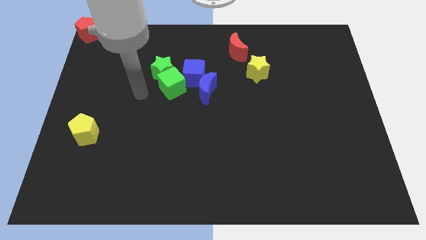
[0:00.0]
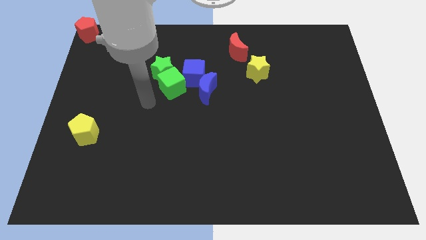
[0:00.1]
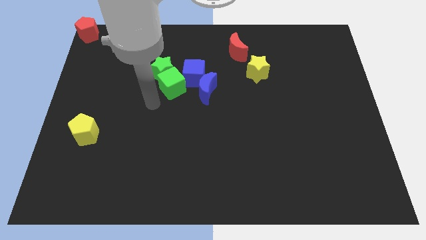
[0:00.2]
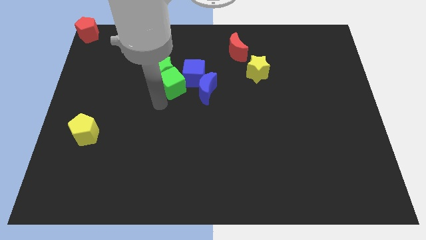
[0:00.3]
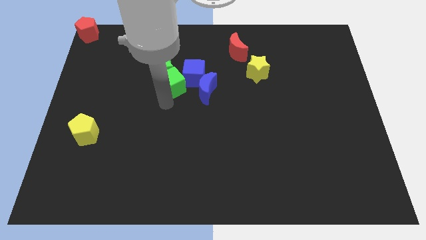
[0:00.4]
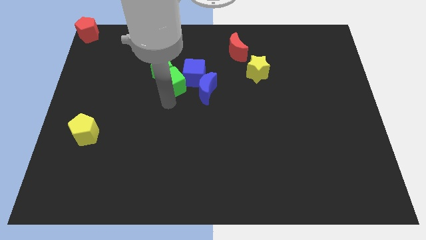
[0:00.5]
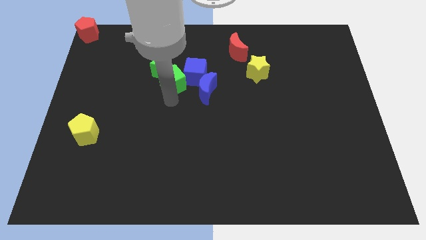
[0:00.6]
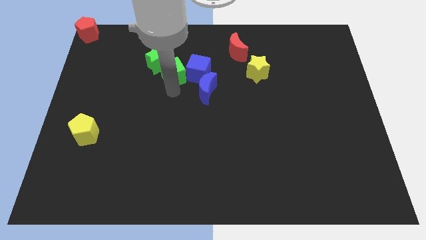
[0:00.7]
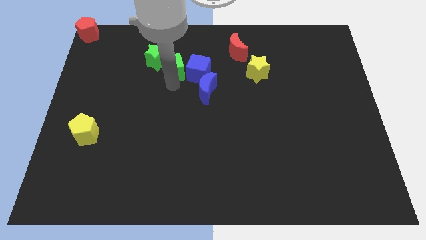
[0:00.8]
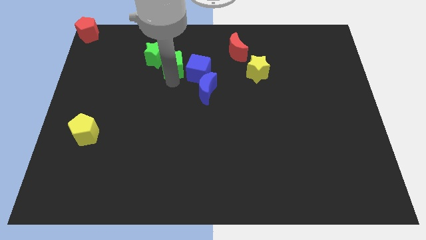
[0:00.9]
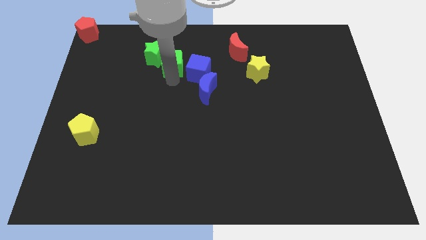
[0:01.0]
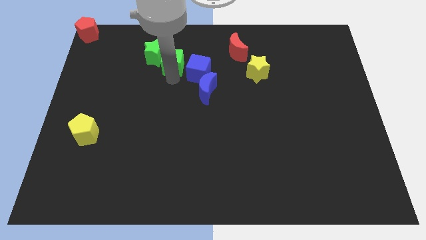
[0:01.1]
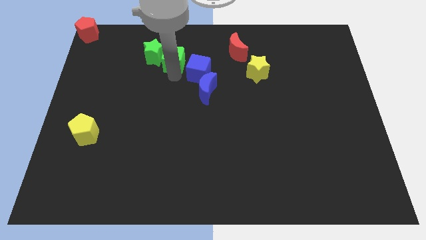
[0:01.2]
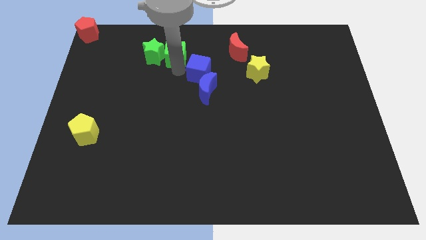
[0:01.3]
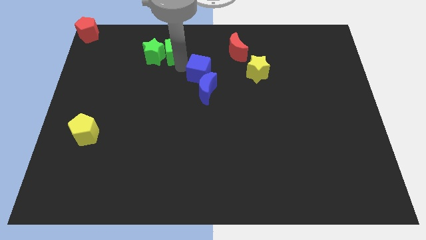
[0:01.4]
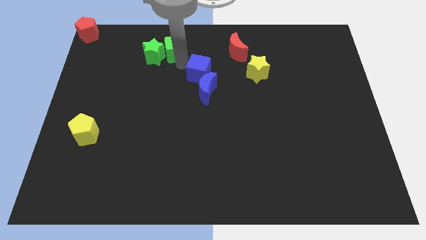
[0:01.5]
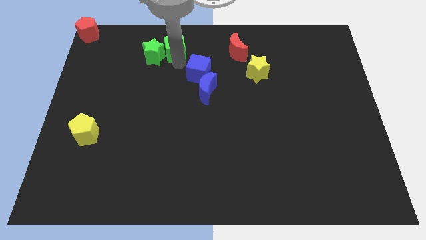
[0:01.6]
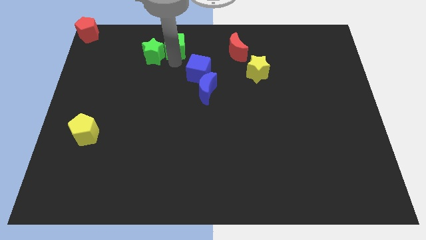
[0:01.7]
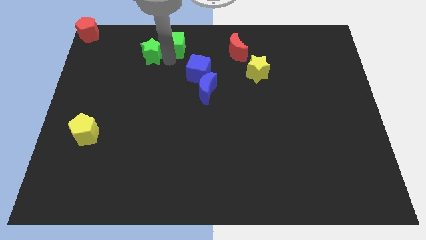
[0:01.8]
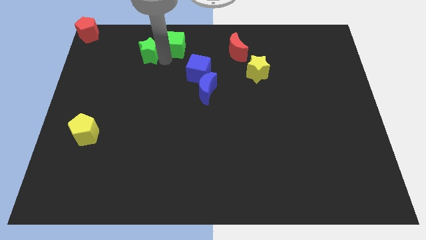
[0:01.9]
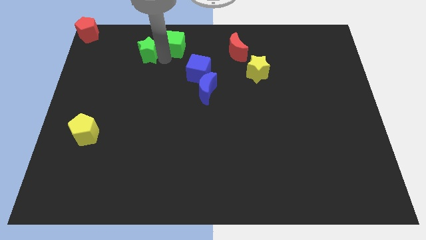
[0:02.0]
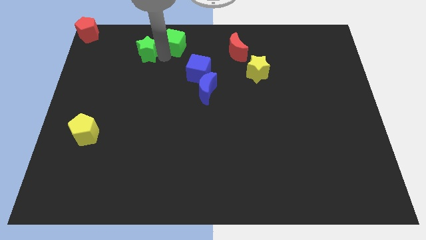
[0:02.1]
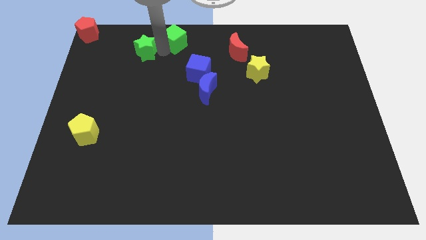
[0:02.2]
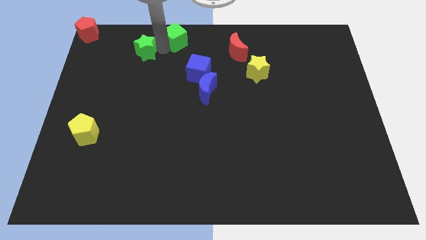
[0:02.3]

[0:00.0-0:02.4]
move green cube into green star

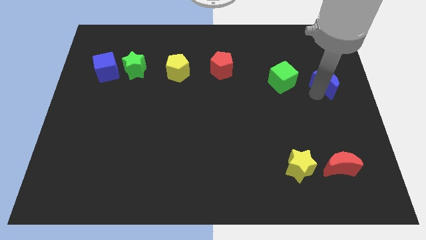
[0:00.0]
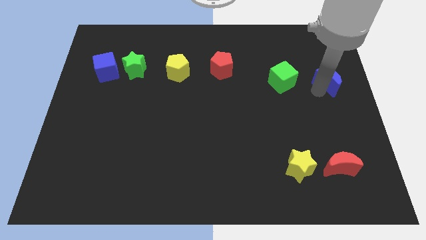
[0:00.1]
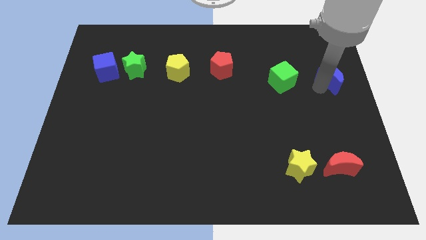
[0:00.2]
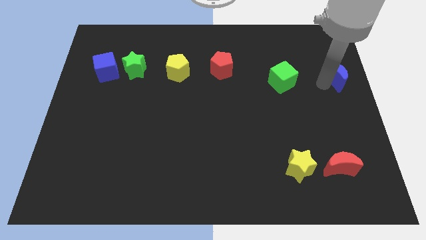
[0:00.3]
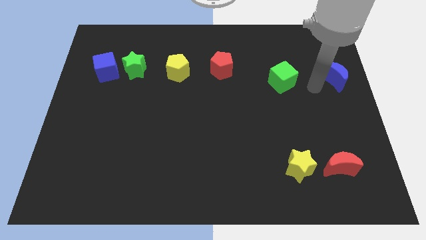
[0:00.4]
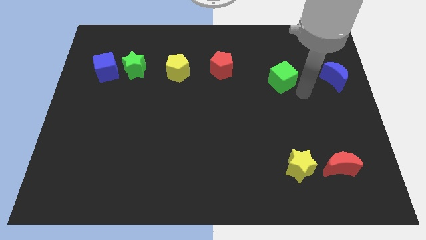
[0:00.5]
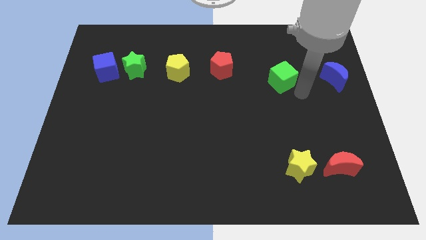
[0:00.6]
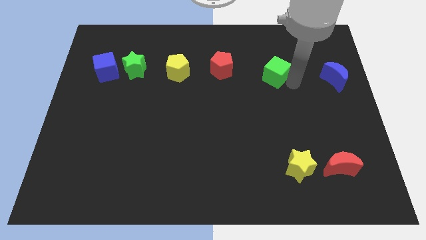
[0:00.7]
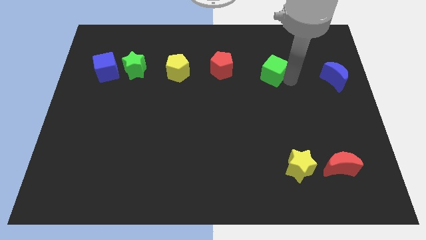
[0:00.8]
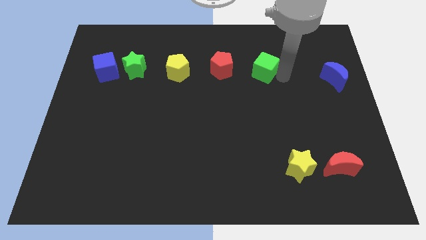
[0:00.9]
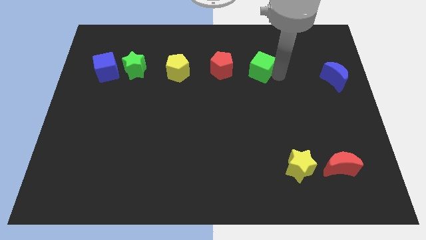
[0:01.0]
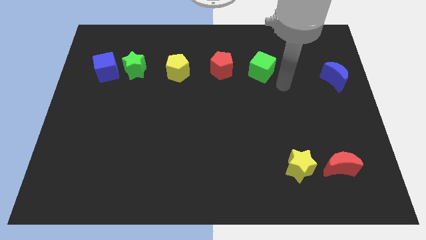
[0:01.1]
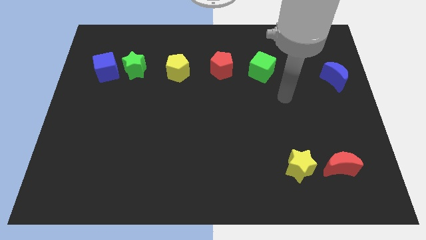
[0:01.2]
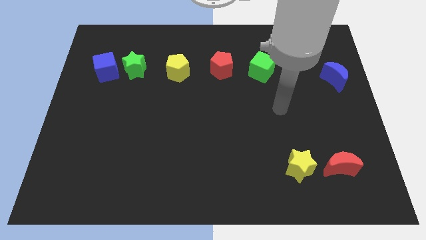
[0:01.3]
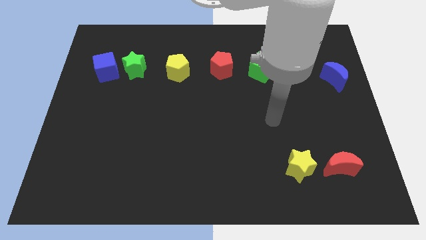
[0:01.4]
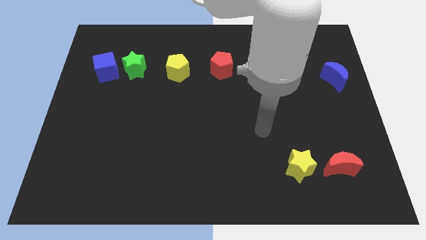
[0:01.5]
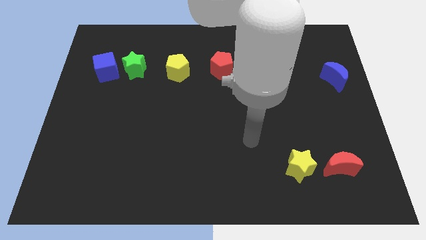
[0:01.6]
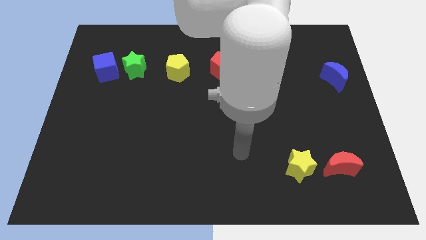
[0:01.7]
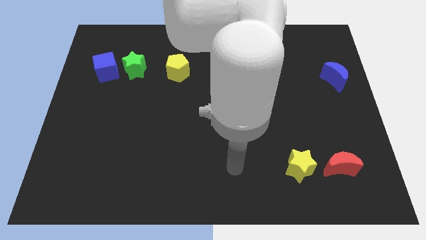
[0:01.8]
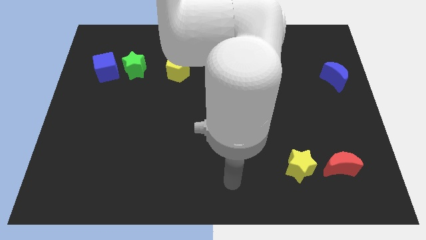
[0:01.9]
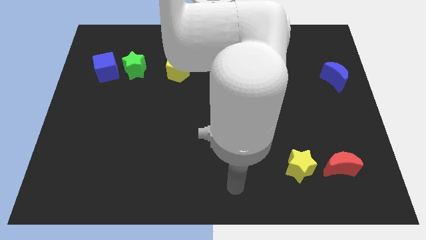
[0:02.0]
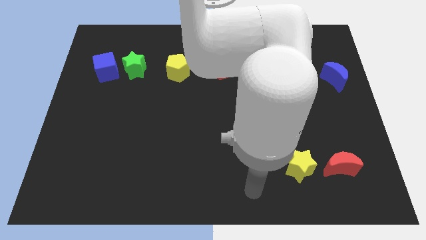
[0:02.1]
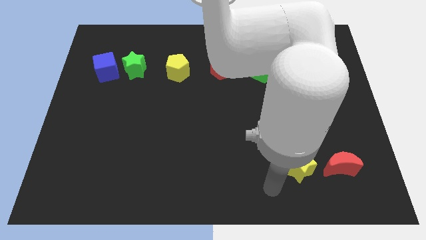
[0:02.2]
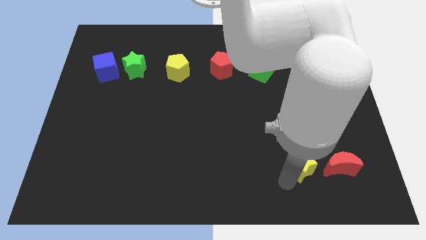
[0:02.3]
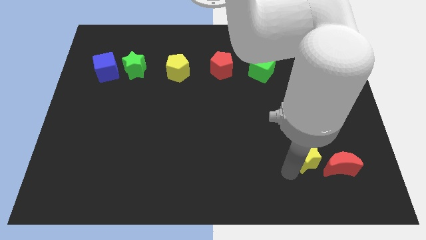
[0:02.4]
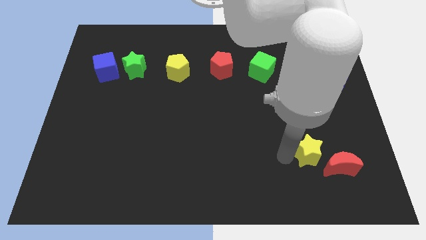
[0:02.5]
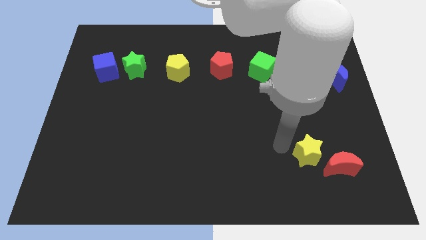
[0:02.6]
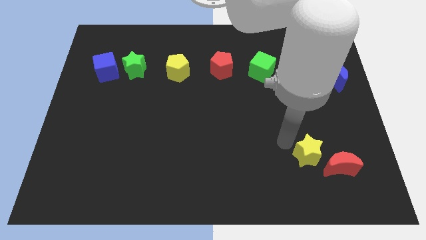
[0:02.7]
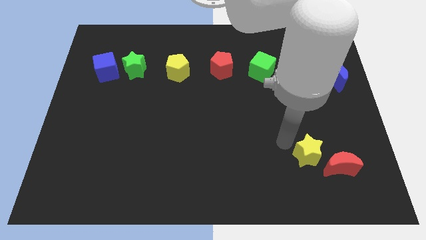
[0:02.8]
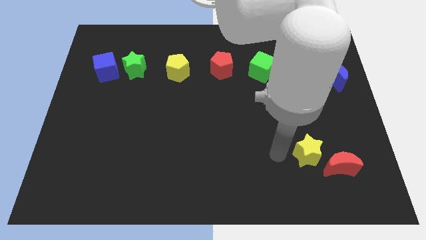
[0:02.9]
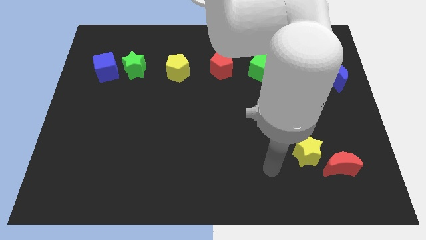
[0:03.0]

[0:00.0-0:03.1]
move your arm towards the left side of the yellow star

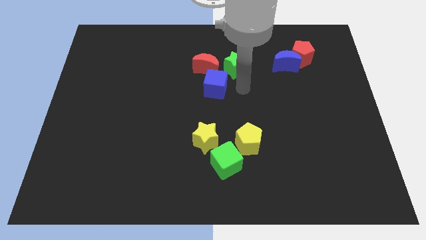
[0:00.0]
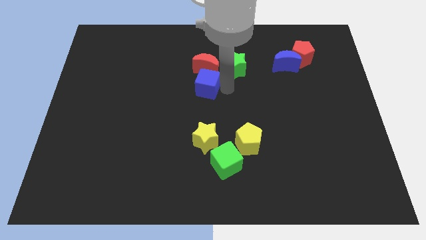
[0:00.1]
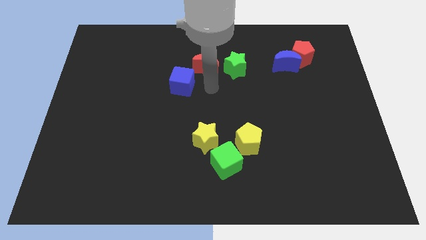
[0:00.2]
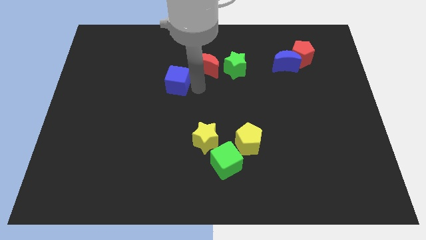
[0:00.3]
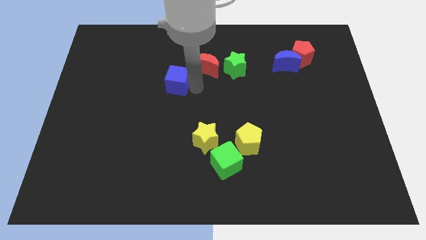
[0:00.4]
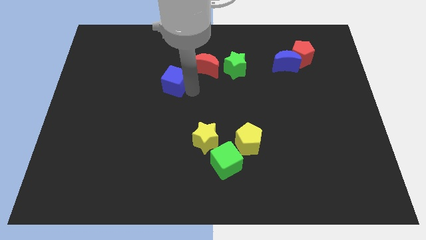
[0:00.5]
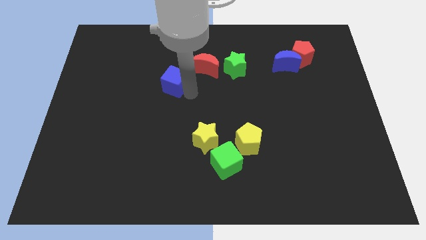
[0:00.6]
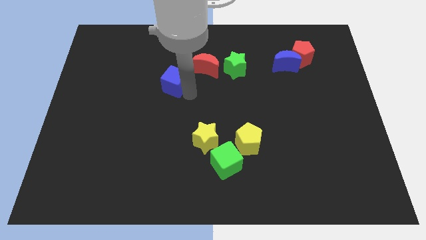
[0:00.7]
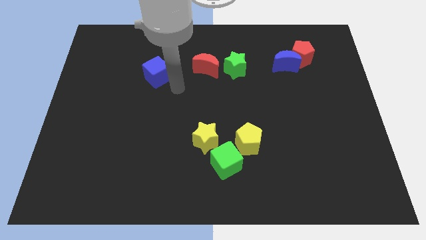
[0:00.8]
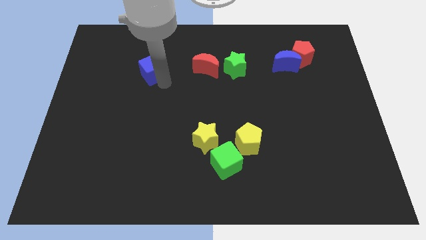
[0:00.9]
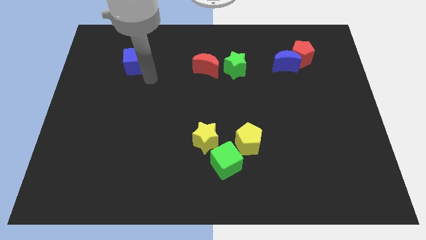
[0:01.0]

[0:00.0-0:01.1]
push the blue cube to the left of the red crescent

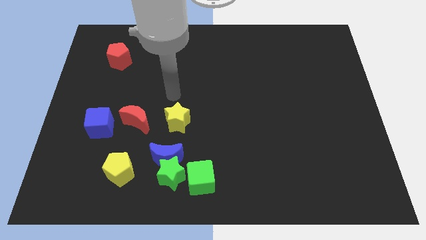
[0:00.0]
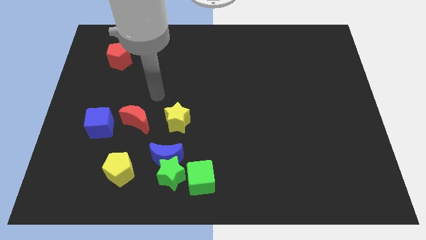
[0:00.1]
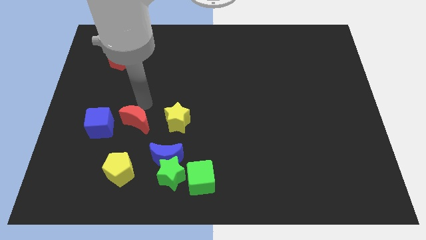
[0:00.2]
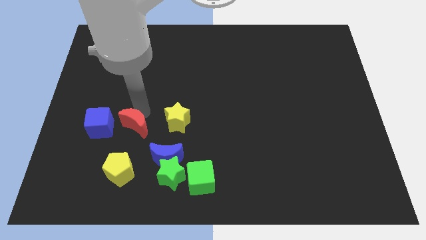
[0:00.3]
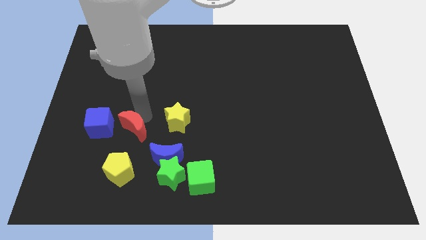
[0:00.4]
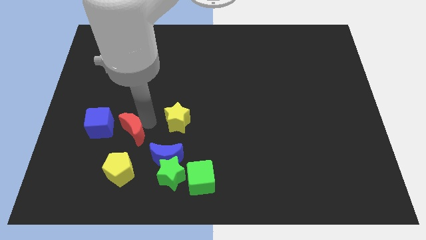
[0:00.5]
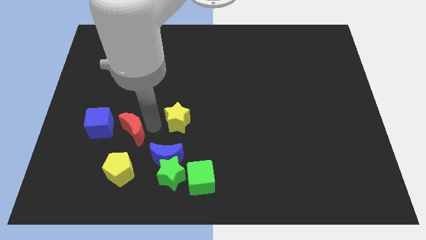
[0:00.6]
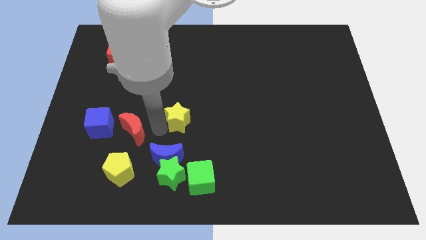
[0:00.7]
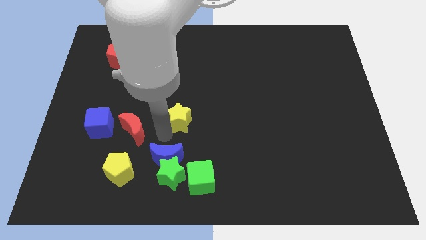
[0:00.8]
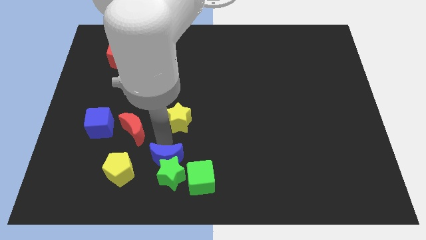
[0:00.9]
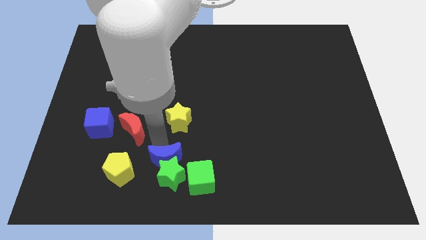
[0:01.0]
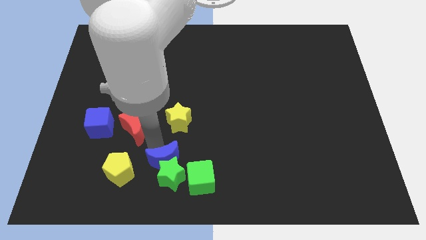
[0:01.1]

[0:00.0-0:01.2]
move the arm to the blue crescent

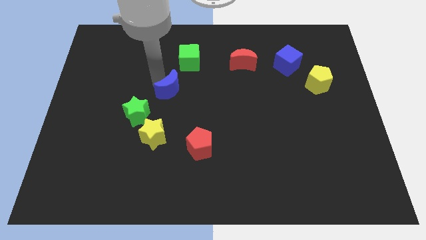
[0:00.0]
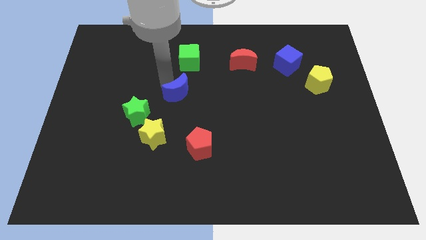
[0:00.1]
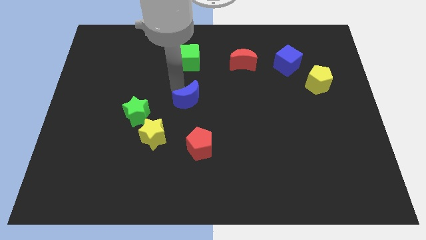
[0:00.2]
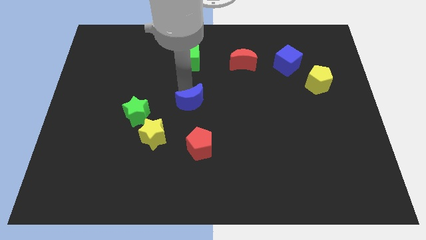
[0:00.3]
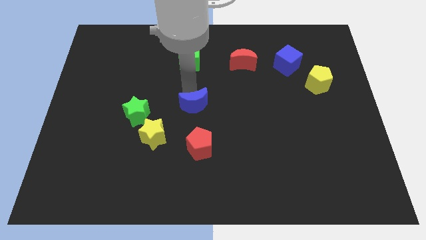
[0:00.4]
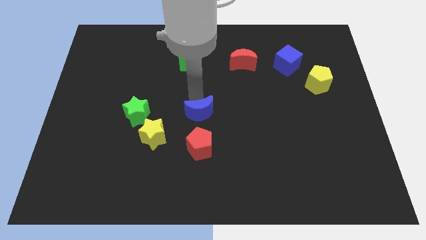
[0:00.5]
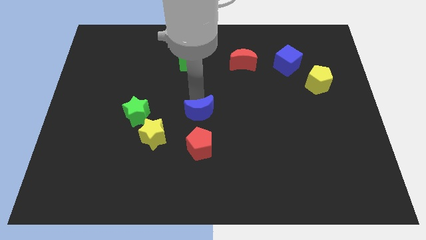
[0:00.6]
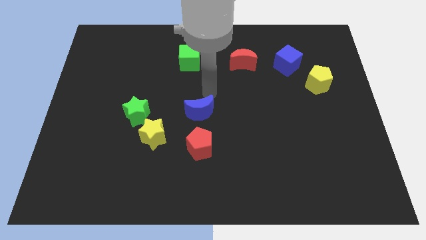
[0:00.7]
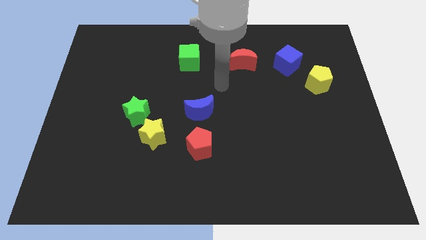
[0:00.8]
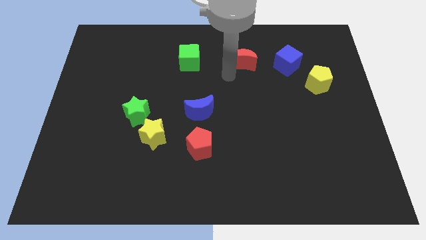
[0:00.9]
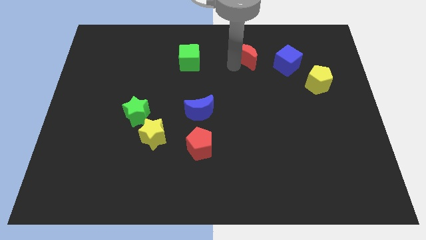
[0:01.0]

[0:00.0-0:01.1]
push the blue moon to the top side of the red pentagon

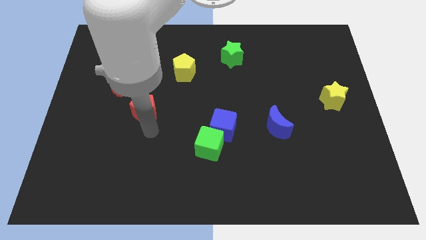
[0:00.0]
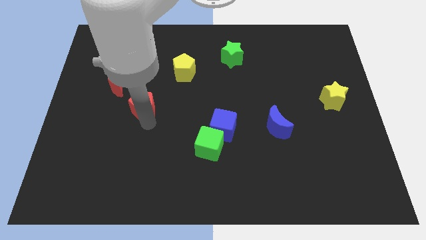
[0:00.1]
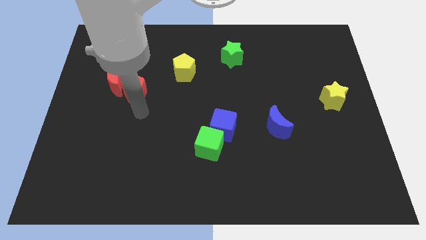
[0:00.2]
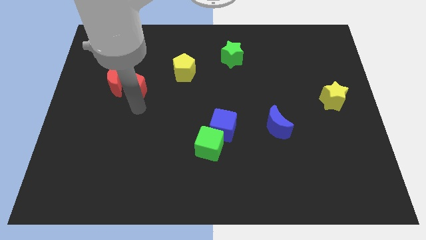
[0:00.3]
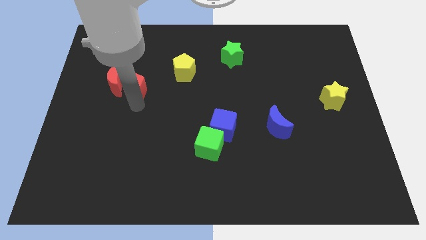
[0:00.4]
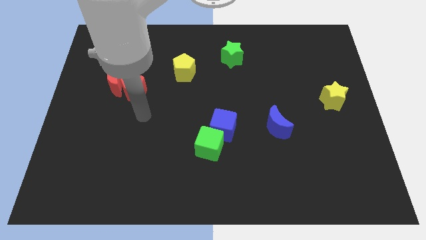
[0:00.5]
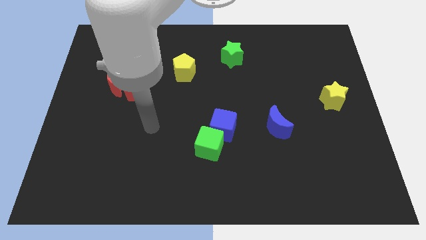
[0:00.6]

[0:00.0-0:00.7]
place red pentagon beside red crescent
